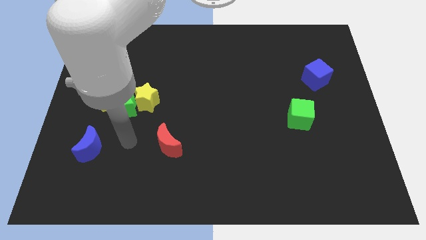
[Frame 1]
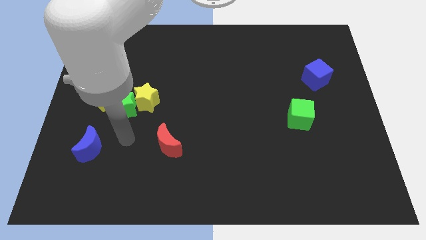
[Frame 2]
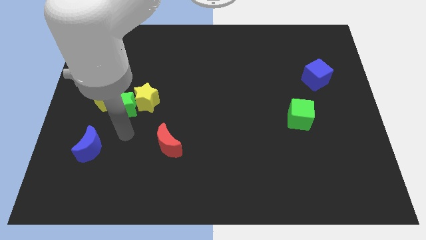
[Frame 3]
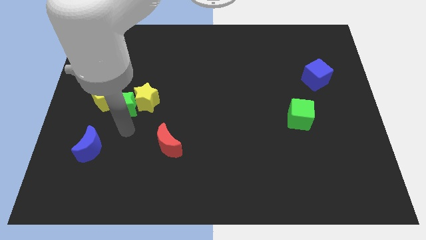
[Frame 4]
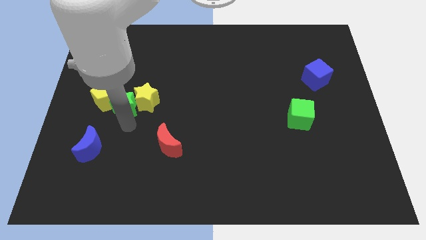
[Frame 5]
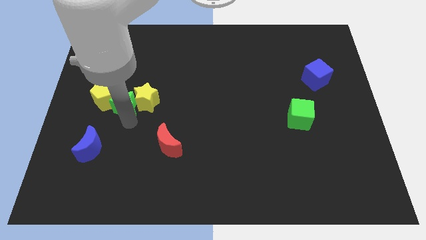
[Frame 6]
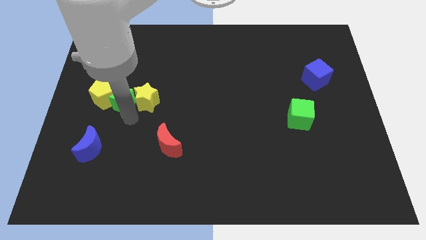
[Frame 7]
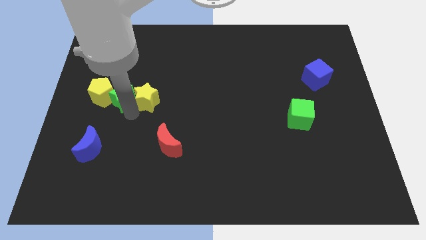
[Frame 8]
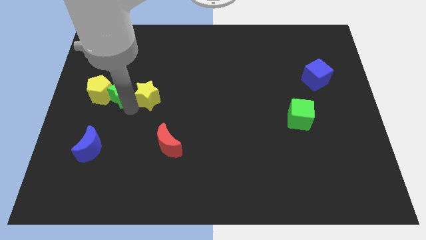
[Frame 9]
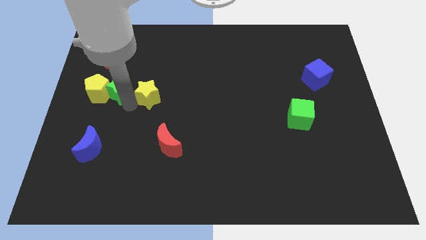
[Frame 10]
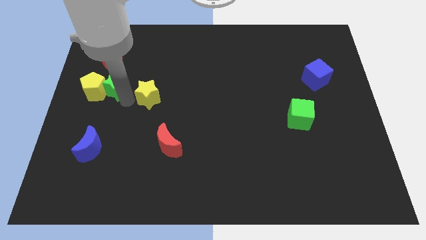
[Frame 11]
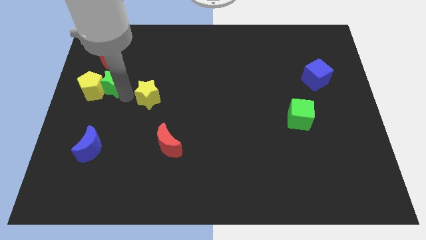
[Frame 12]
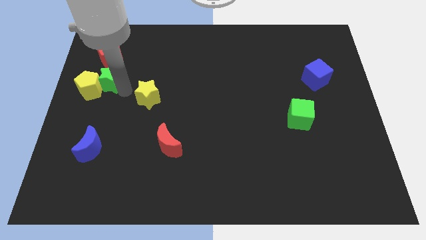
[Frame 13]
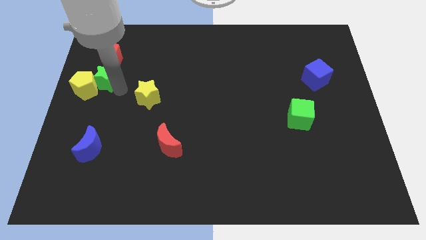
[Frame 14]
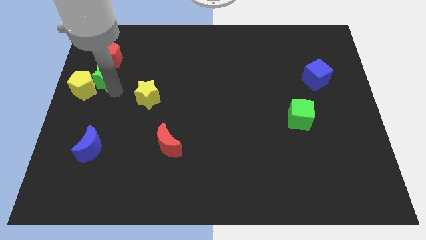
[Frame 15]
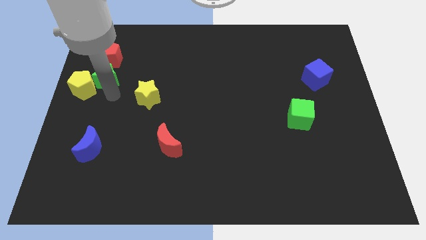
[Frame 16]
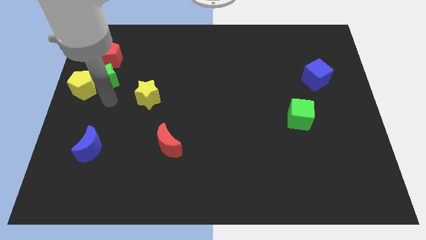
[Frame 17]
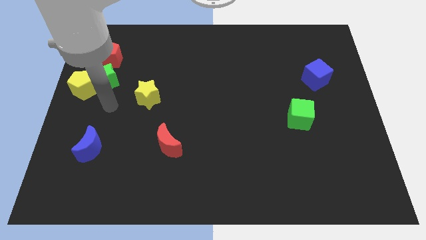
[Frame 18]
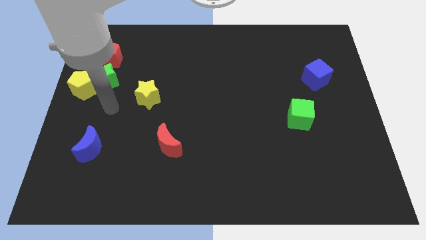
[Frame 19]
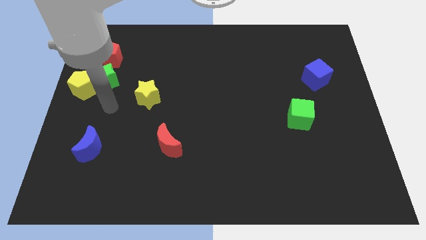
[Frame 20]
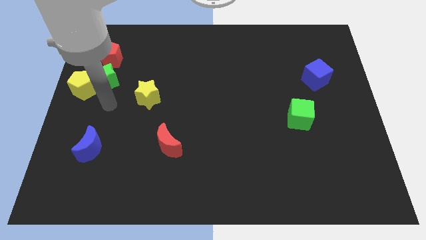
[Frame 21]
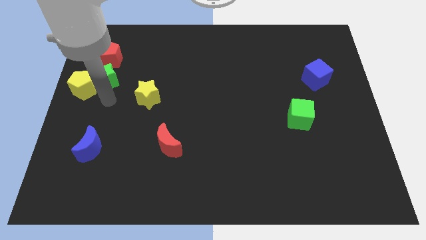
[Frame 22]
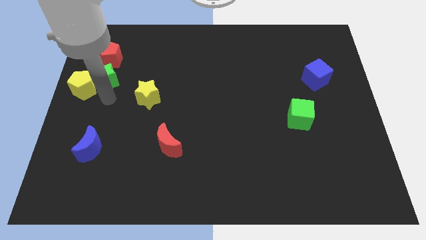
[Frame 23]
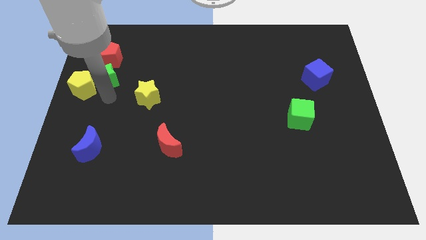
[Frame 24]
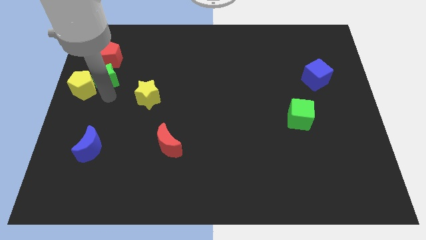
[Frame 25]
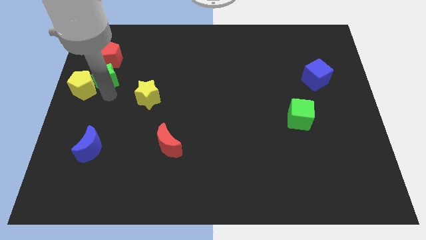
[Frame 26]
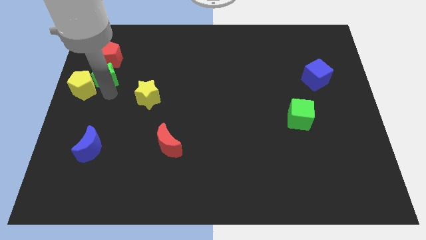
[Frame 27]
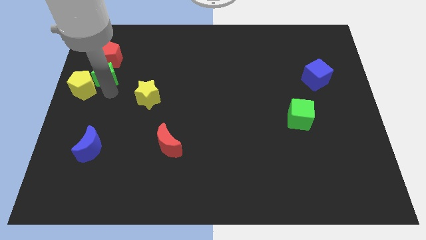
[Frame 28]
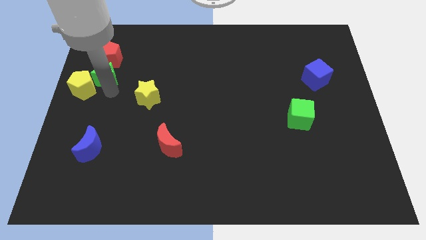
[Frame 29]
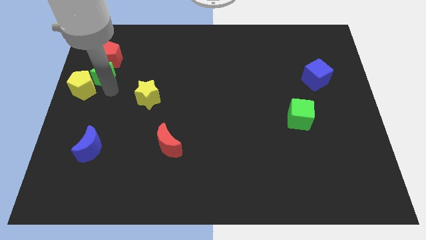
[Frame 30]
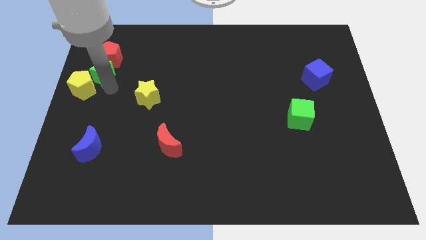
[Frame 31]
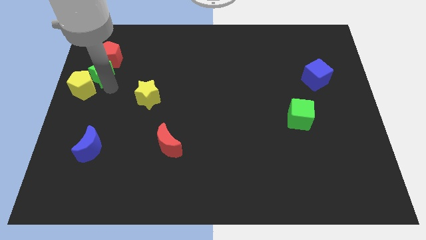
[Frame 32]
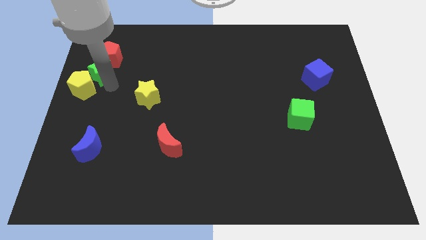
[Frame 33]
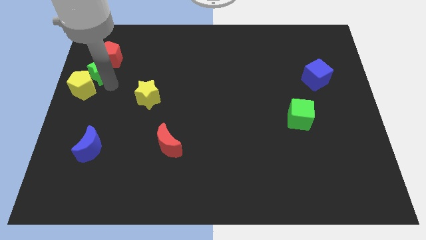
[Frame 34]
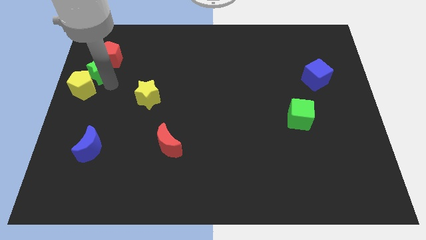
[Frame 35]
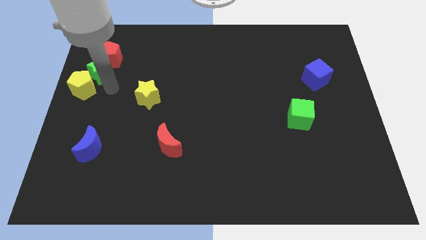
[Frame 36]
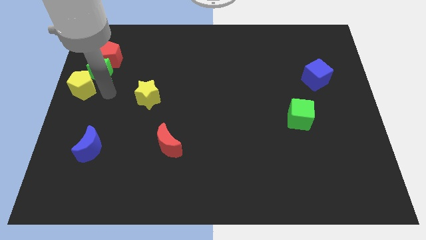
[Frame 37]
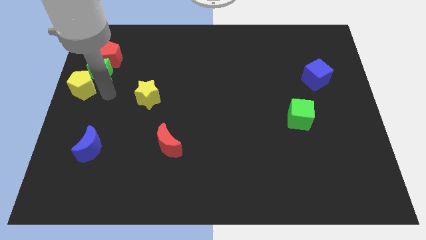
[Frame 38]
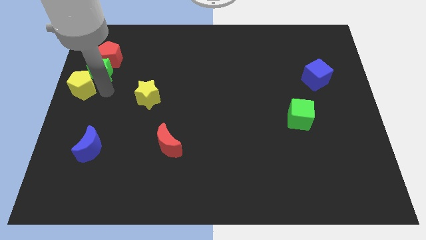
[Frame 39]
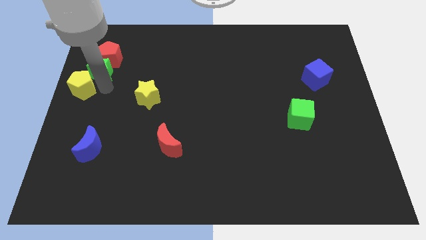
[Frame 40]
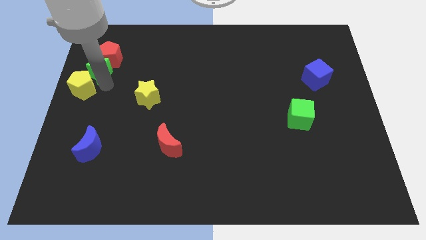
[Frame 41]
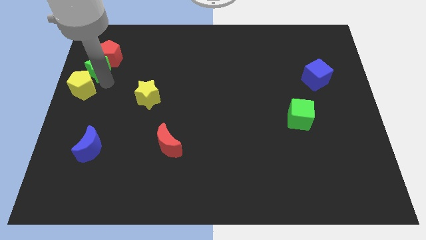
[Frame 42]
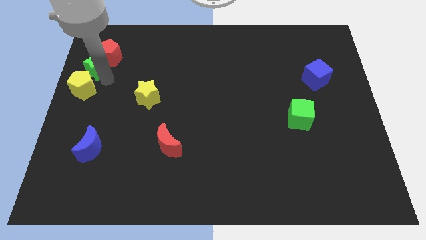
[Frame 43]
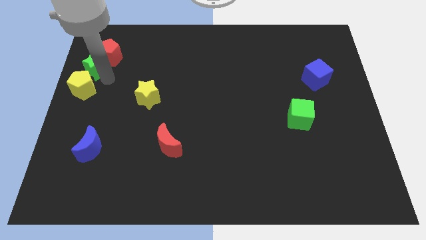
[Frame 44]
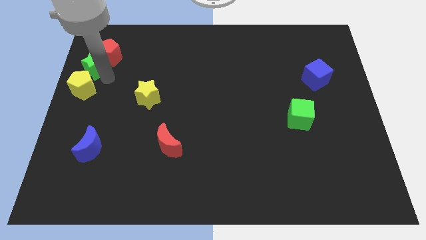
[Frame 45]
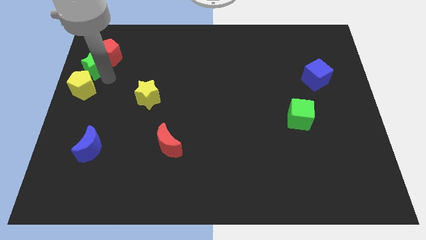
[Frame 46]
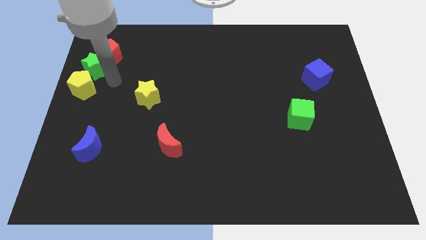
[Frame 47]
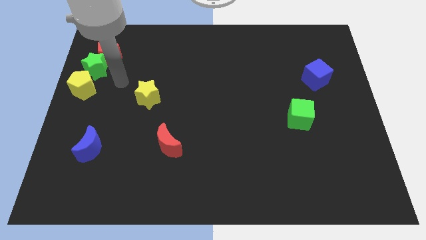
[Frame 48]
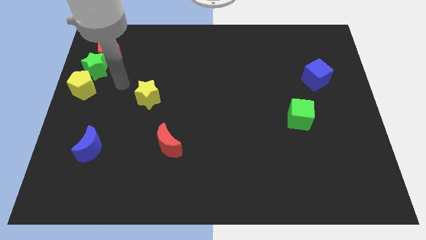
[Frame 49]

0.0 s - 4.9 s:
push the yellow pentagon away from the yellow star

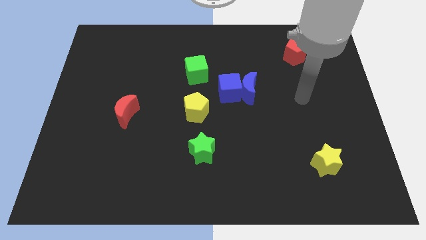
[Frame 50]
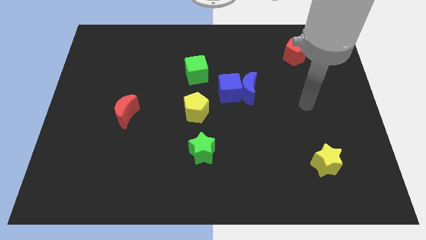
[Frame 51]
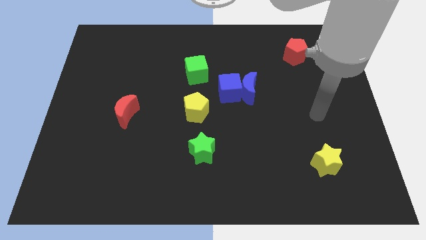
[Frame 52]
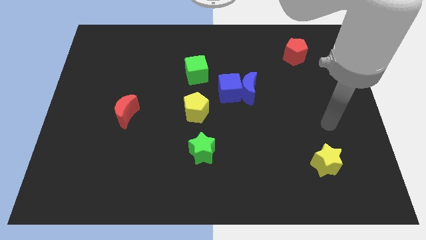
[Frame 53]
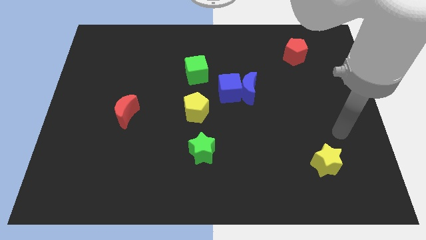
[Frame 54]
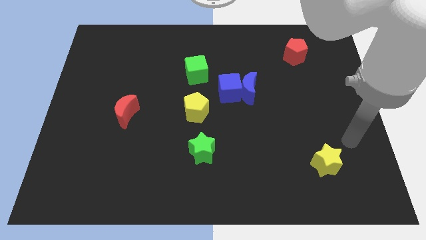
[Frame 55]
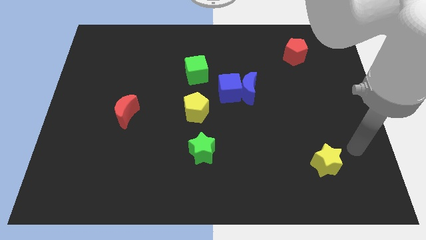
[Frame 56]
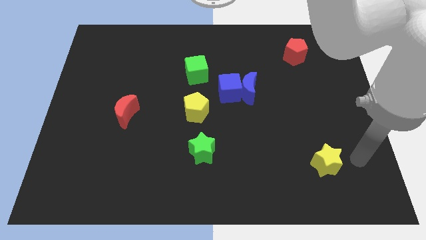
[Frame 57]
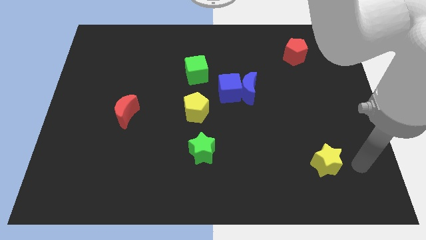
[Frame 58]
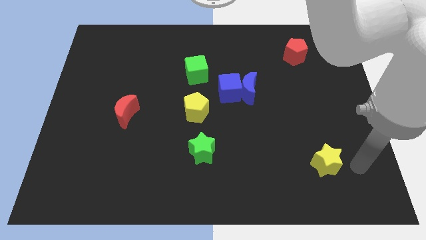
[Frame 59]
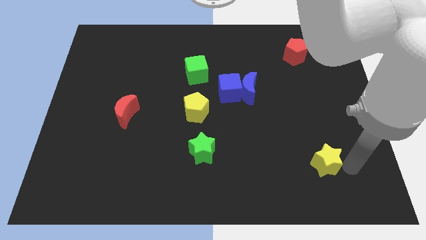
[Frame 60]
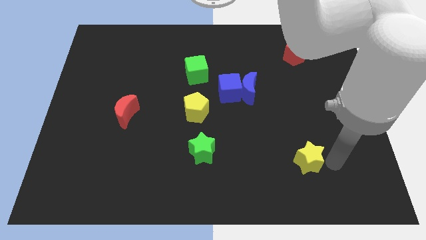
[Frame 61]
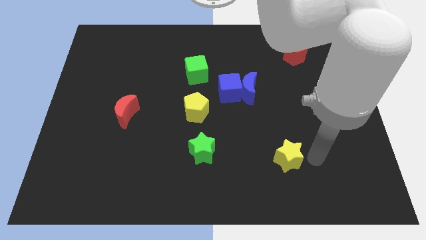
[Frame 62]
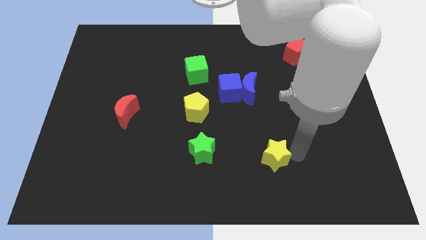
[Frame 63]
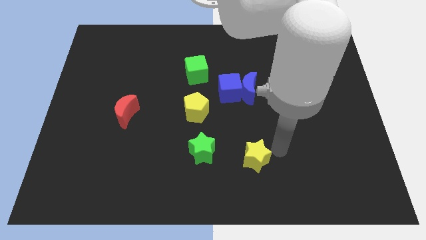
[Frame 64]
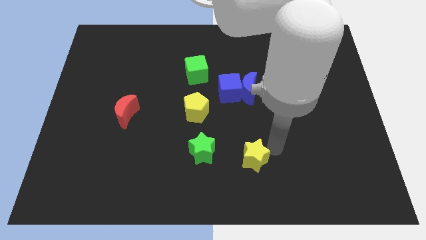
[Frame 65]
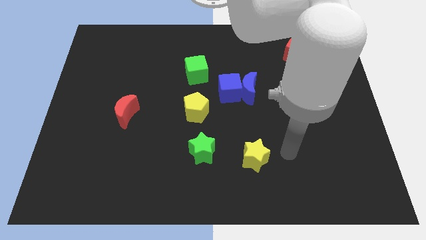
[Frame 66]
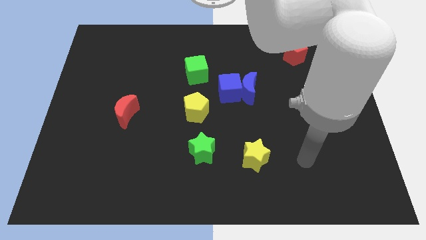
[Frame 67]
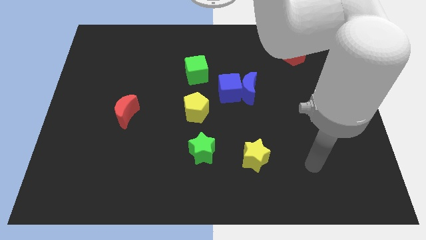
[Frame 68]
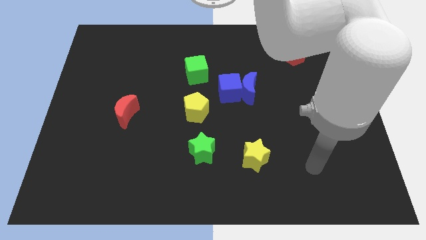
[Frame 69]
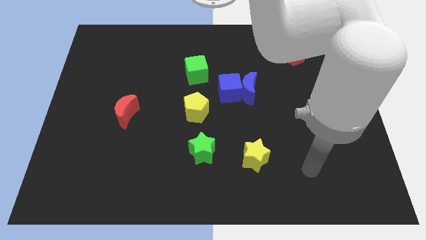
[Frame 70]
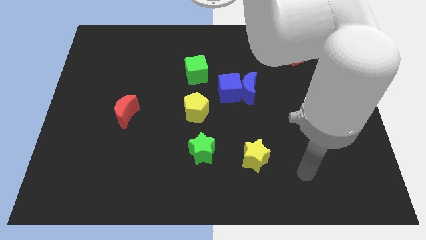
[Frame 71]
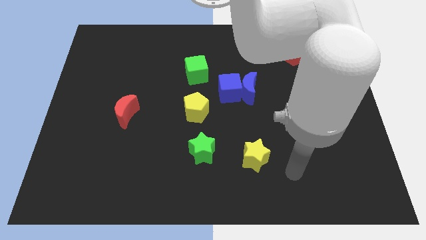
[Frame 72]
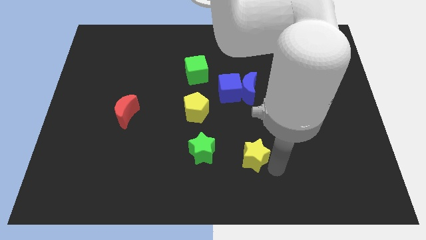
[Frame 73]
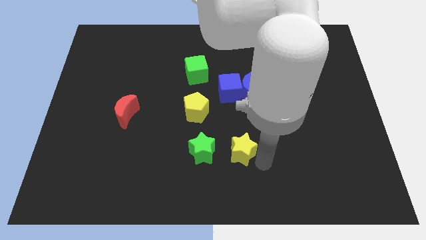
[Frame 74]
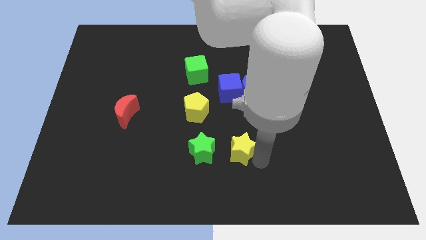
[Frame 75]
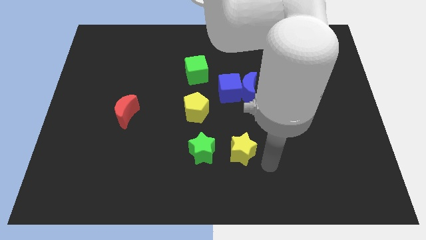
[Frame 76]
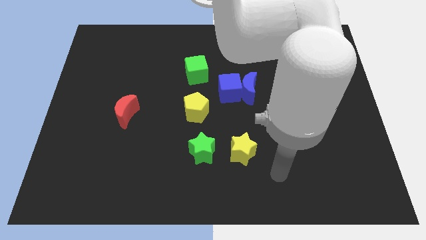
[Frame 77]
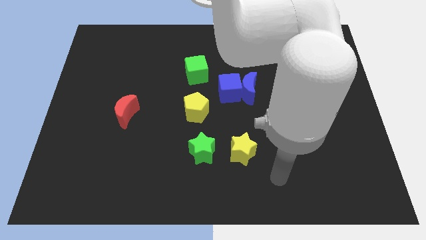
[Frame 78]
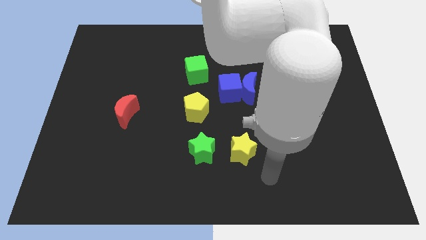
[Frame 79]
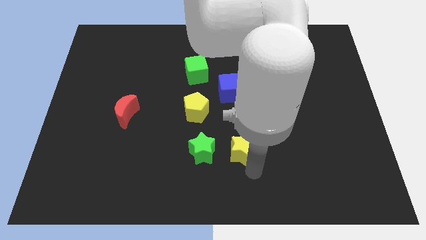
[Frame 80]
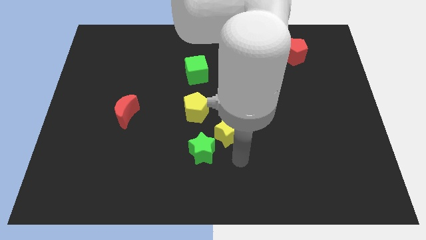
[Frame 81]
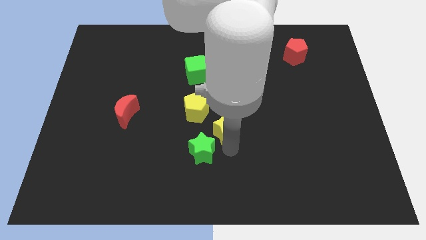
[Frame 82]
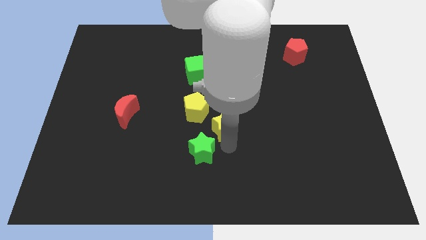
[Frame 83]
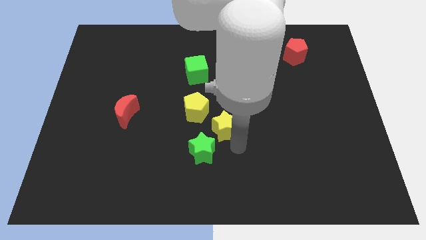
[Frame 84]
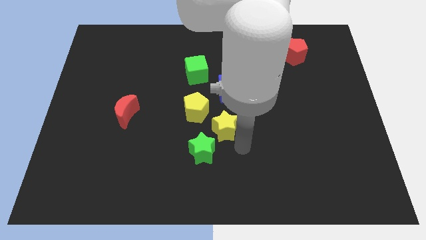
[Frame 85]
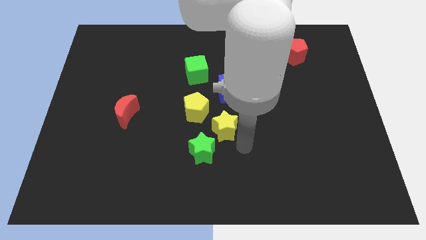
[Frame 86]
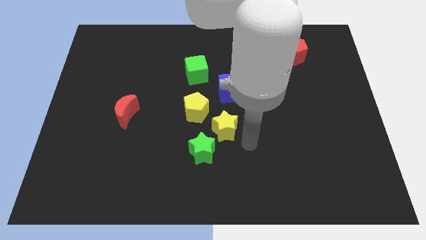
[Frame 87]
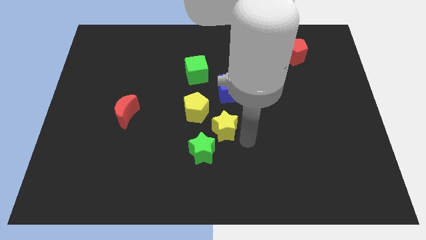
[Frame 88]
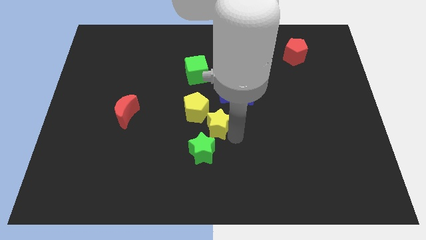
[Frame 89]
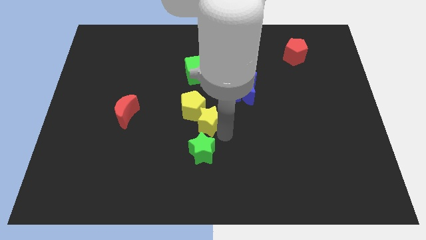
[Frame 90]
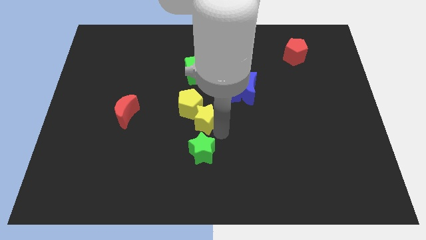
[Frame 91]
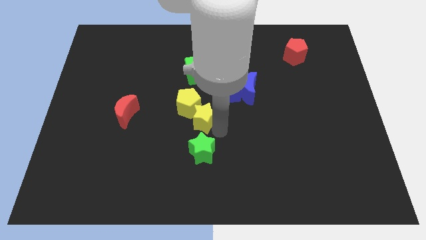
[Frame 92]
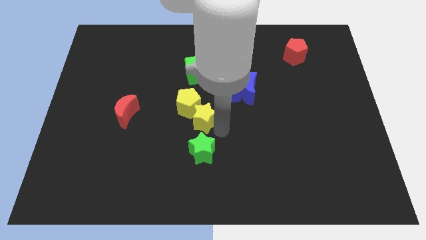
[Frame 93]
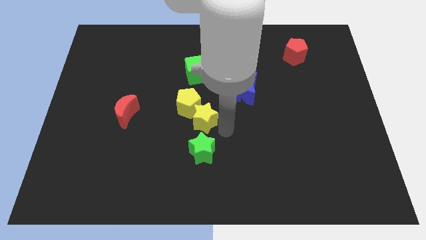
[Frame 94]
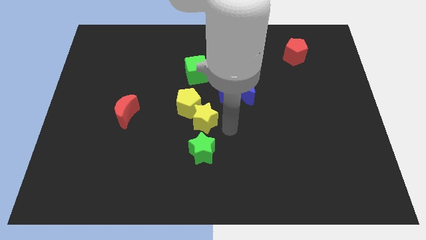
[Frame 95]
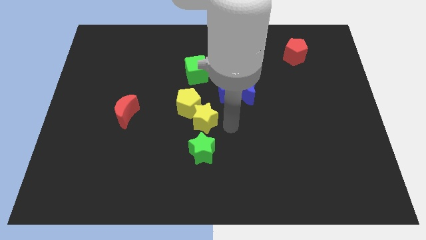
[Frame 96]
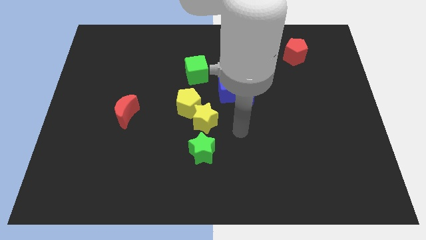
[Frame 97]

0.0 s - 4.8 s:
push the yellow star into the yellow pentagon
